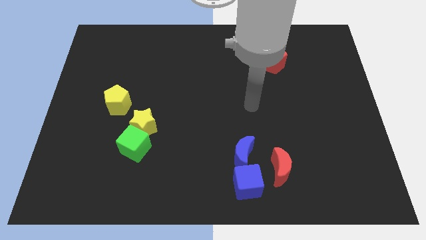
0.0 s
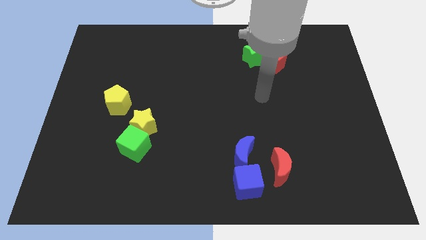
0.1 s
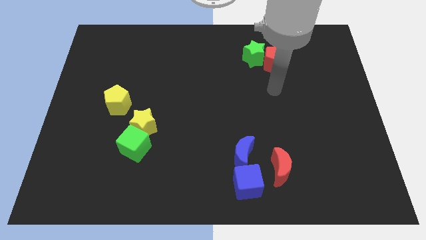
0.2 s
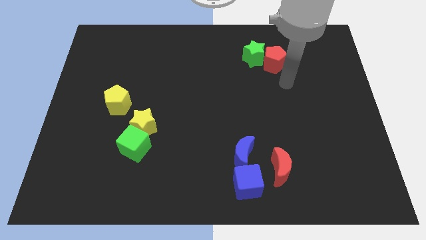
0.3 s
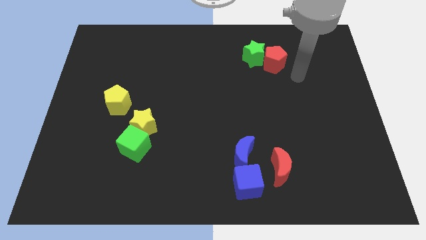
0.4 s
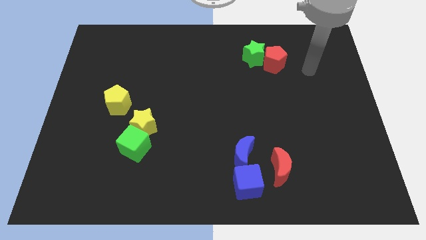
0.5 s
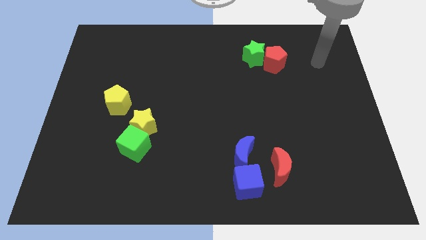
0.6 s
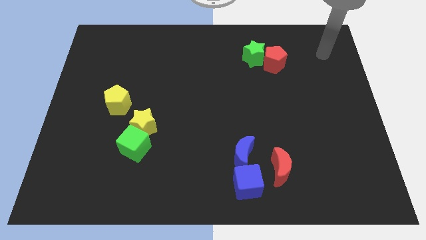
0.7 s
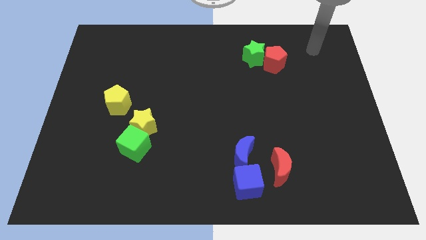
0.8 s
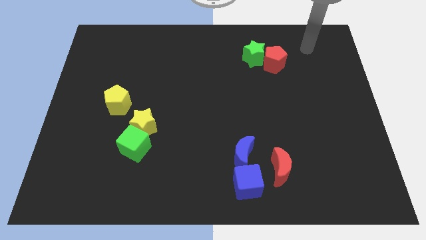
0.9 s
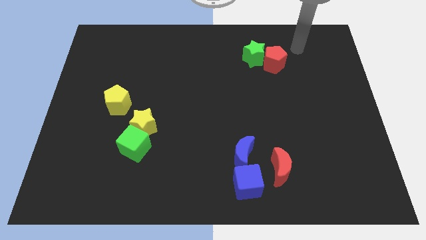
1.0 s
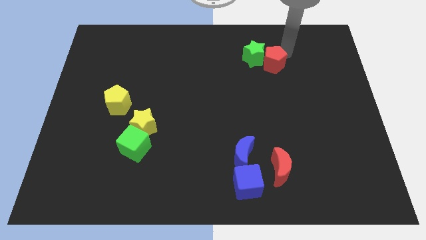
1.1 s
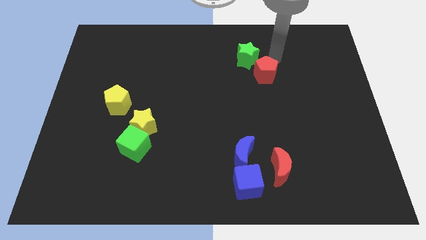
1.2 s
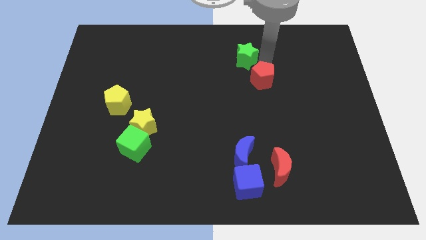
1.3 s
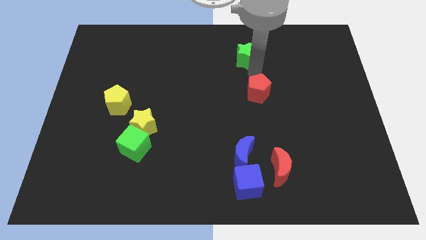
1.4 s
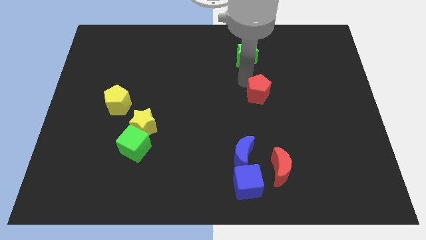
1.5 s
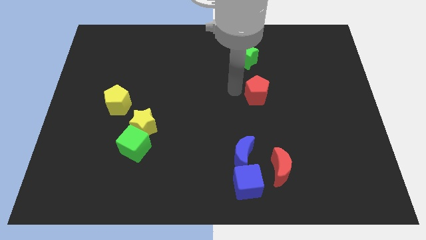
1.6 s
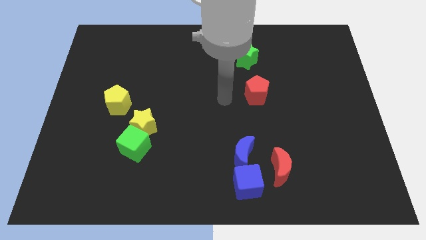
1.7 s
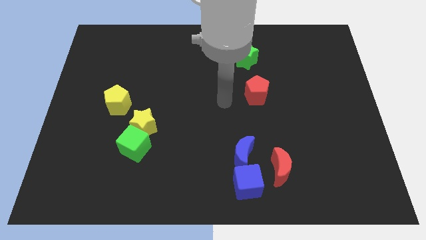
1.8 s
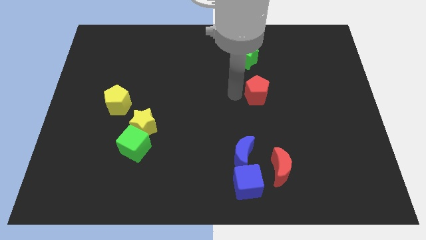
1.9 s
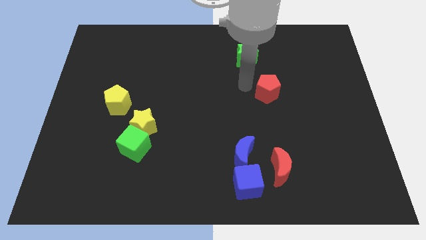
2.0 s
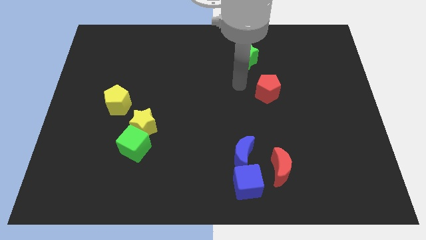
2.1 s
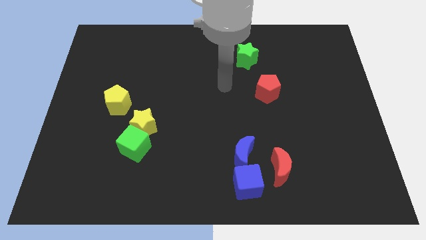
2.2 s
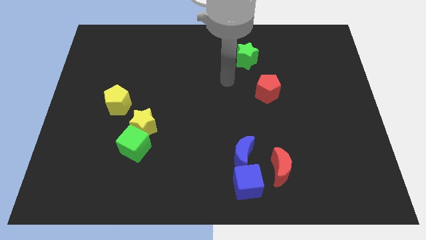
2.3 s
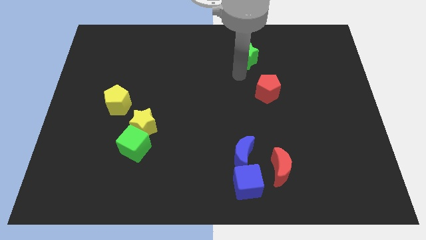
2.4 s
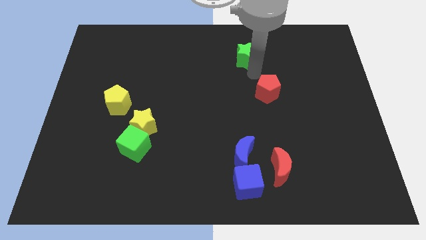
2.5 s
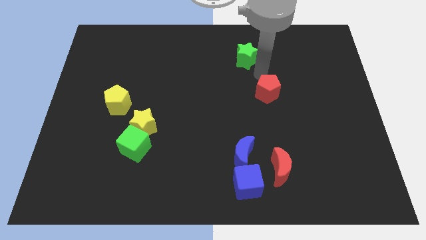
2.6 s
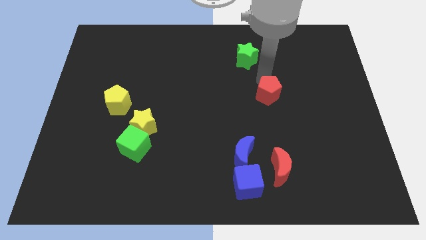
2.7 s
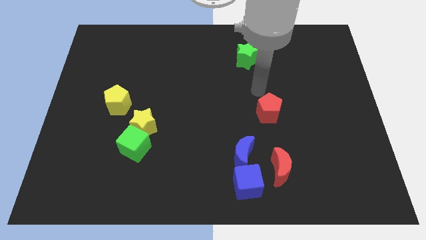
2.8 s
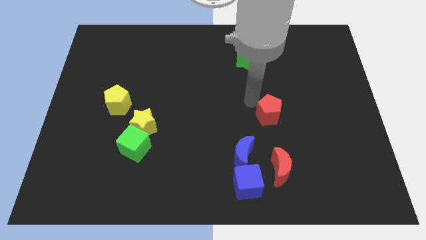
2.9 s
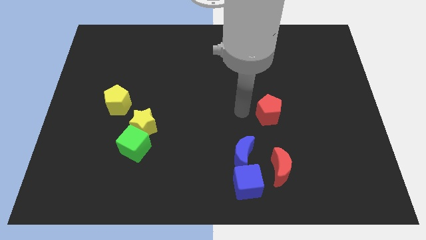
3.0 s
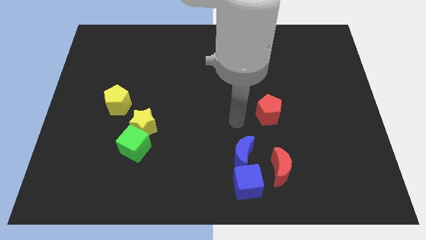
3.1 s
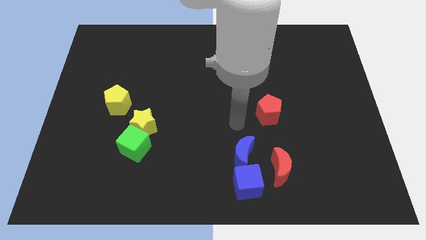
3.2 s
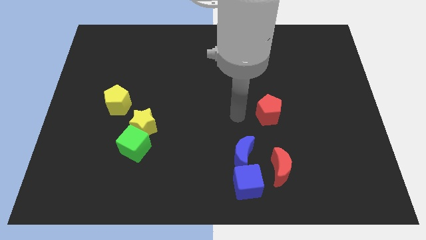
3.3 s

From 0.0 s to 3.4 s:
push the red pentagon above the red moon

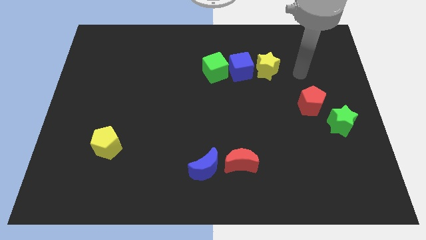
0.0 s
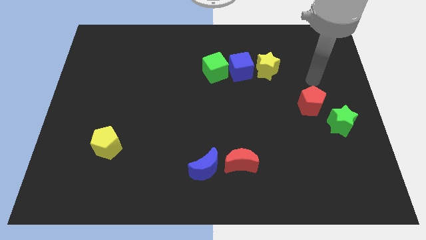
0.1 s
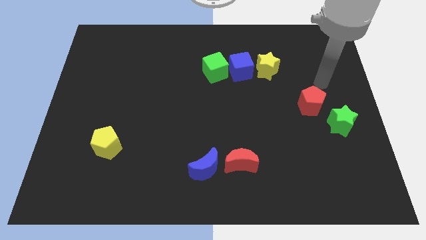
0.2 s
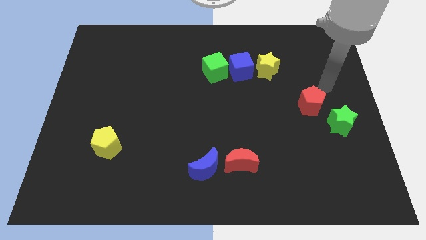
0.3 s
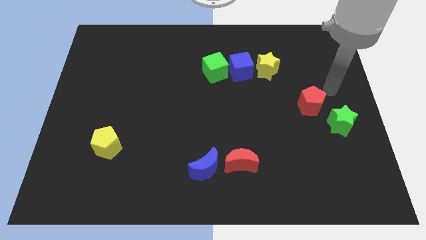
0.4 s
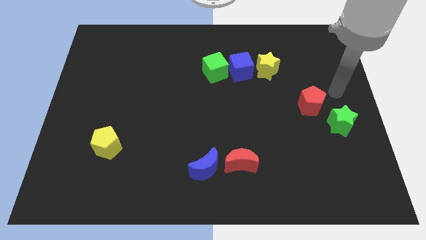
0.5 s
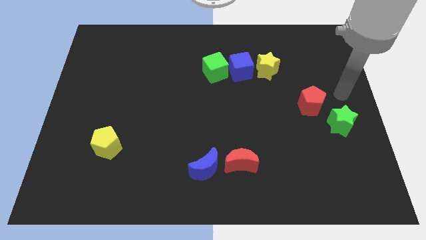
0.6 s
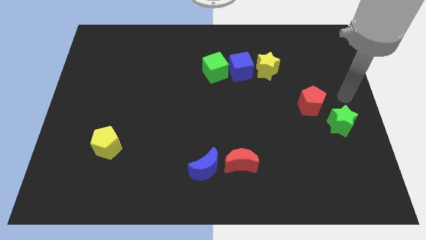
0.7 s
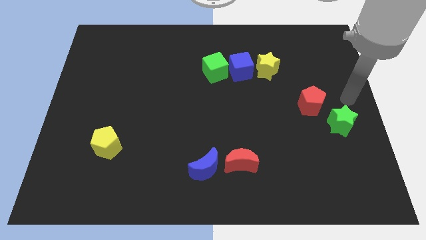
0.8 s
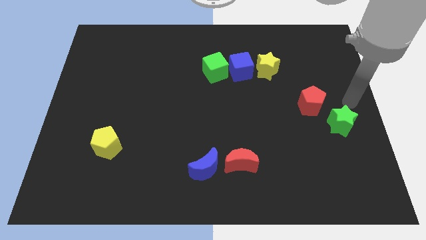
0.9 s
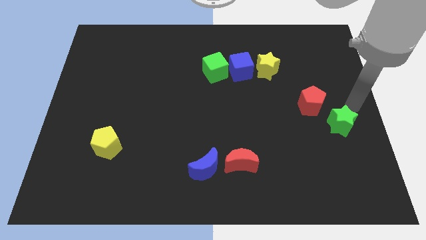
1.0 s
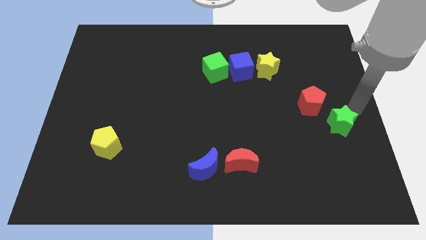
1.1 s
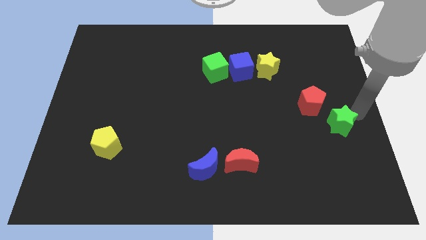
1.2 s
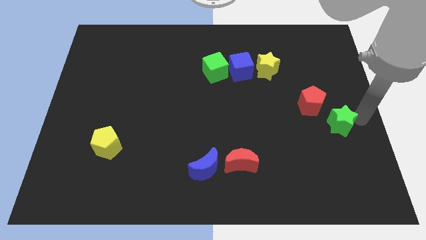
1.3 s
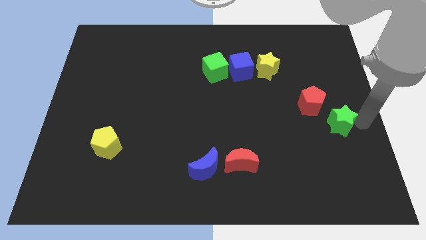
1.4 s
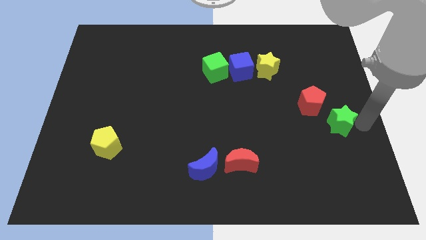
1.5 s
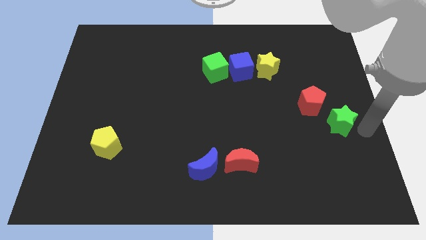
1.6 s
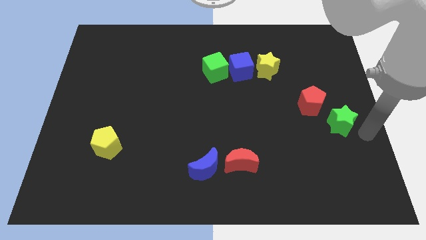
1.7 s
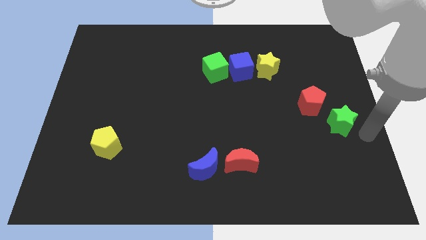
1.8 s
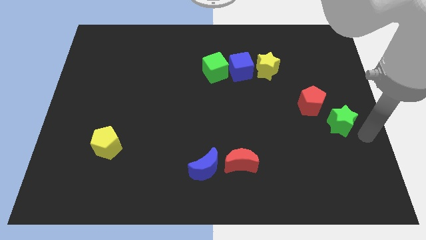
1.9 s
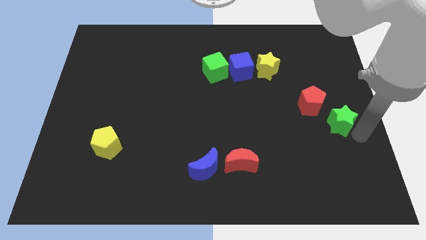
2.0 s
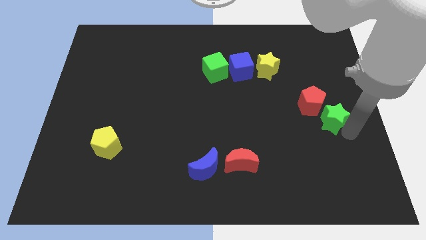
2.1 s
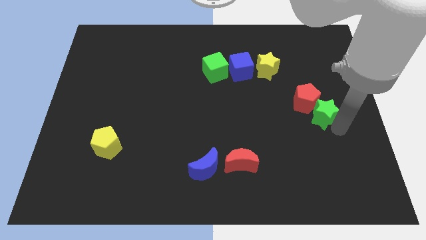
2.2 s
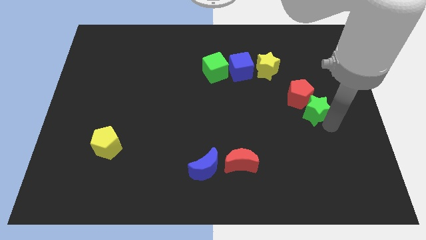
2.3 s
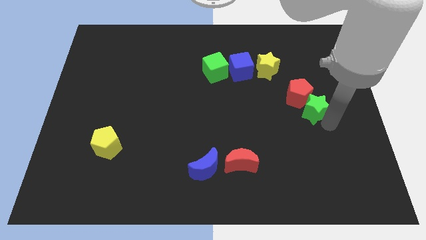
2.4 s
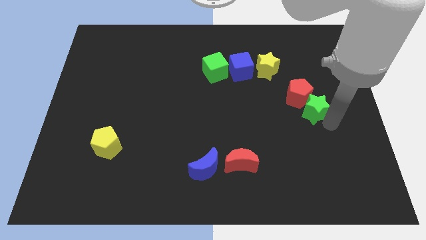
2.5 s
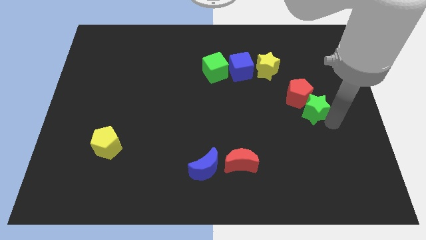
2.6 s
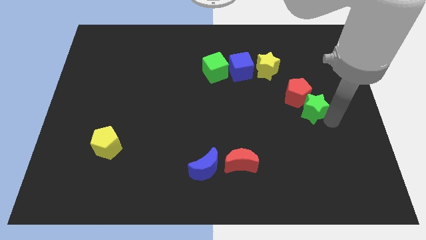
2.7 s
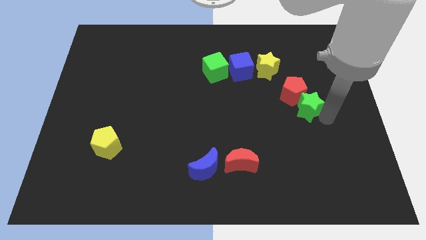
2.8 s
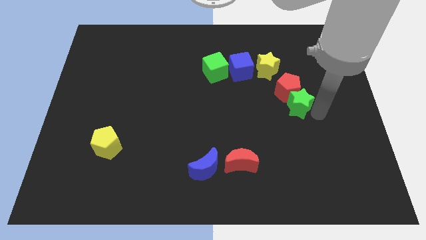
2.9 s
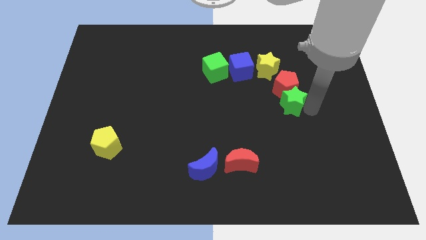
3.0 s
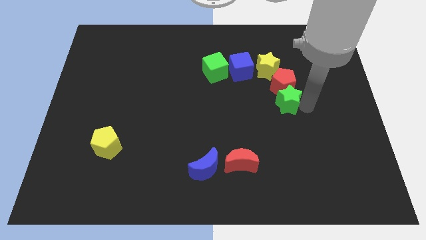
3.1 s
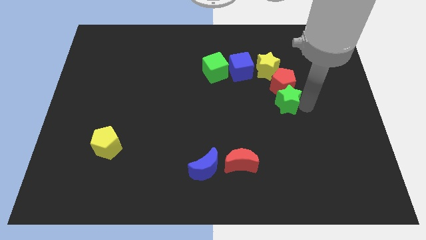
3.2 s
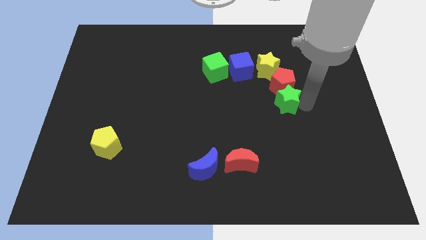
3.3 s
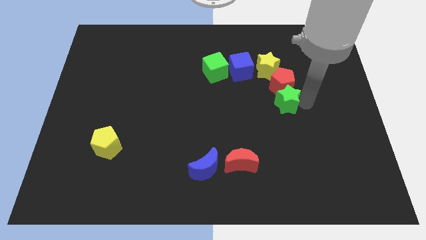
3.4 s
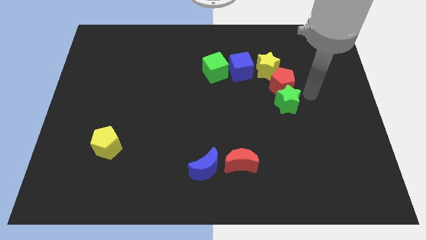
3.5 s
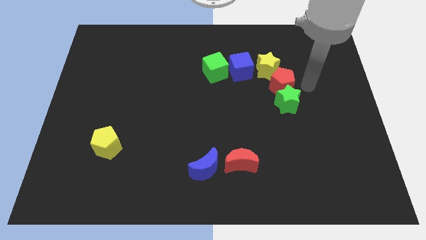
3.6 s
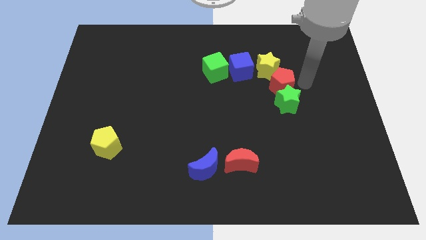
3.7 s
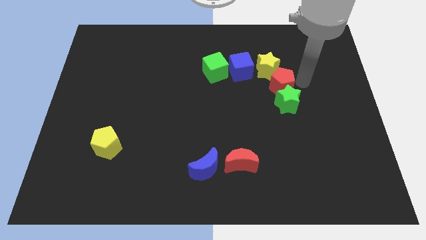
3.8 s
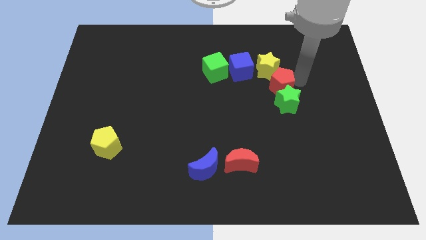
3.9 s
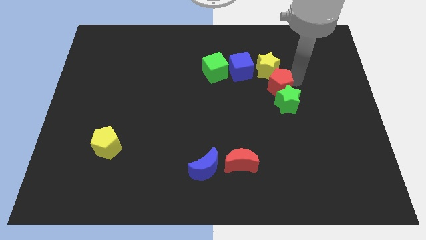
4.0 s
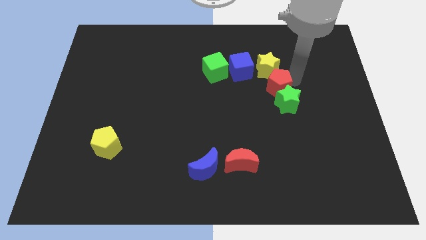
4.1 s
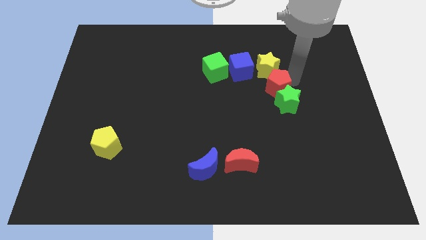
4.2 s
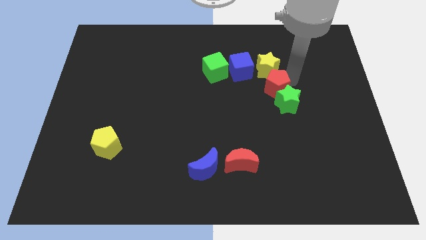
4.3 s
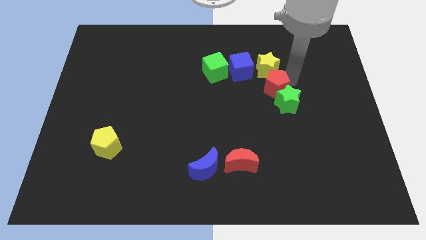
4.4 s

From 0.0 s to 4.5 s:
place the red pentagon to the bottom of the yellow star

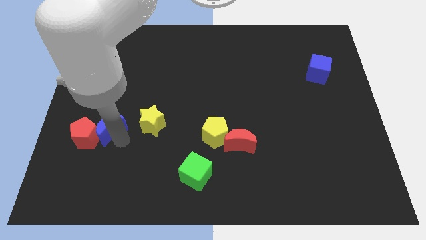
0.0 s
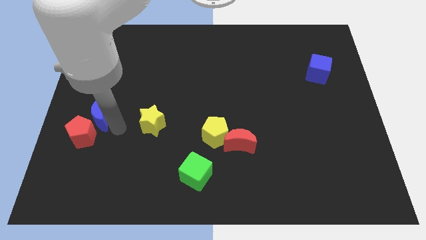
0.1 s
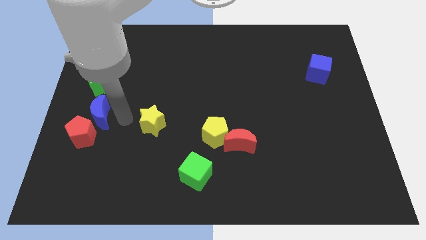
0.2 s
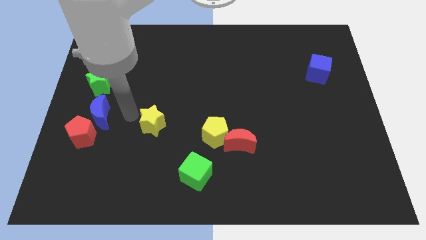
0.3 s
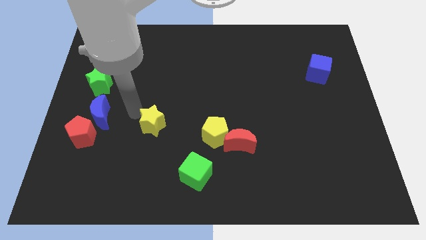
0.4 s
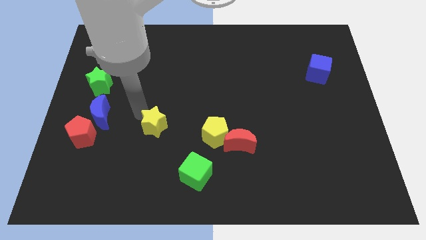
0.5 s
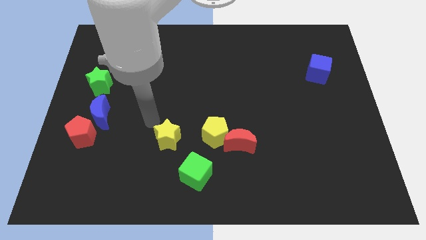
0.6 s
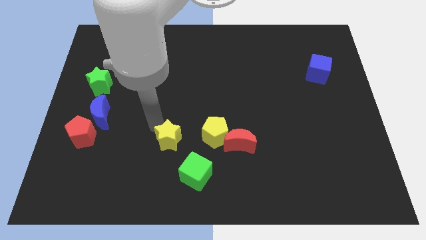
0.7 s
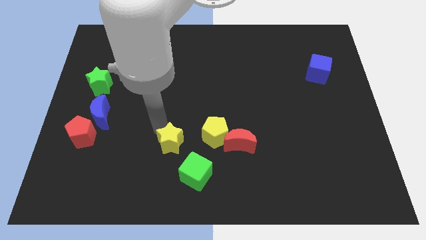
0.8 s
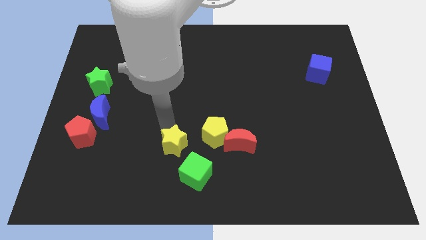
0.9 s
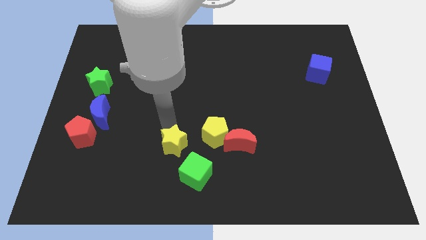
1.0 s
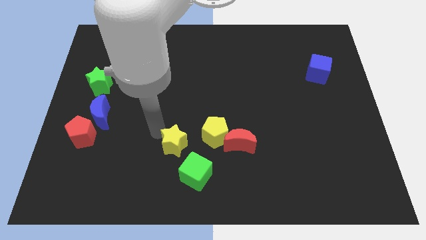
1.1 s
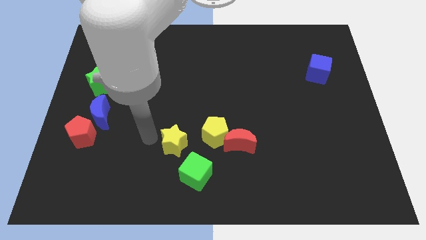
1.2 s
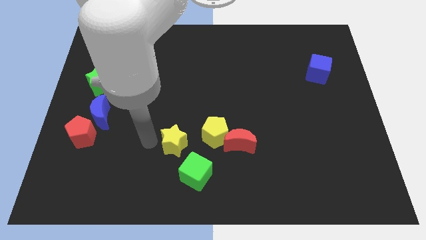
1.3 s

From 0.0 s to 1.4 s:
push the yellow star at the top left side of the green cube
